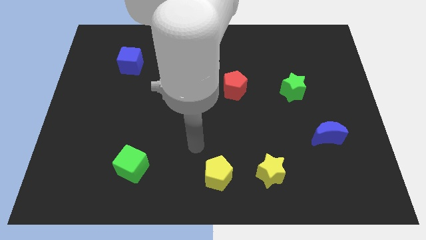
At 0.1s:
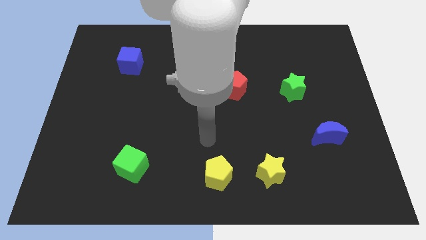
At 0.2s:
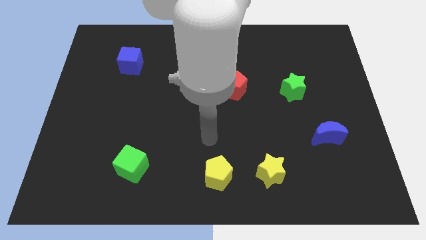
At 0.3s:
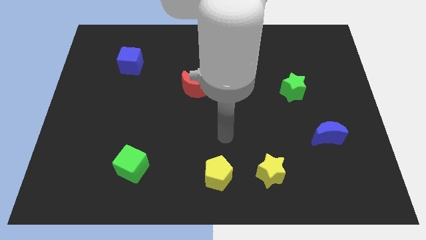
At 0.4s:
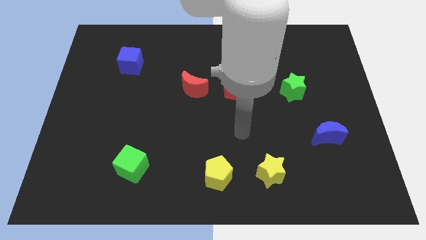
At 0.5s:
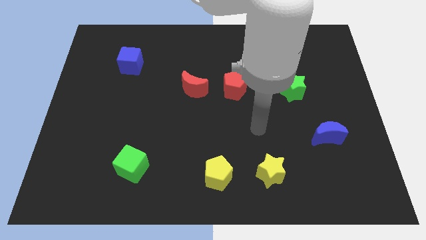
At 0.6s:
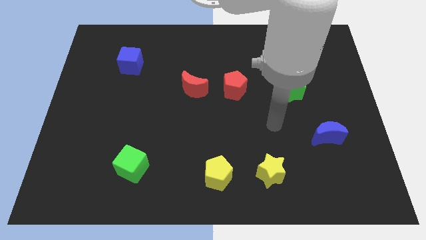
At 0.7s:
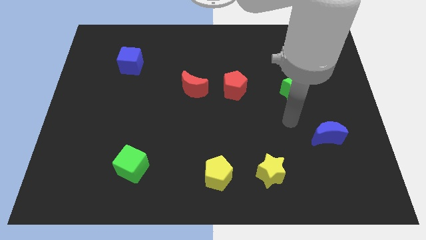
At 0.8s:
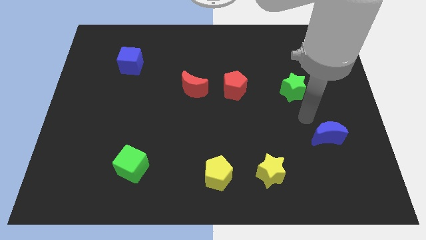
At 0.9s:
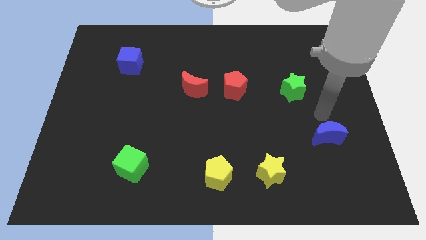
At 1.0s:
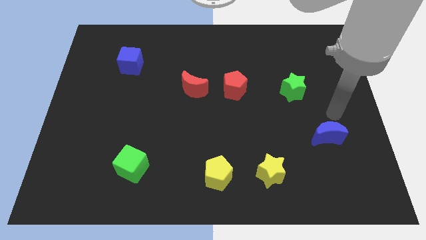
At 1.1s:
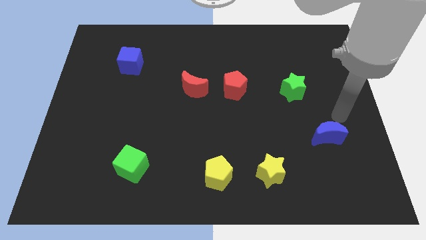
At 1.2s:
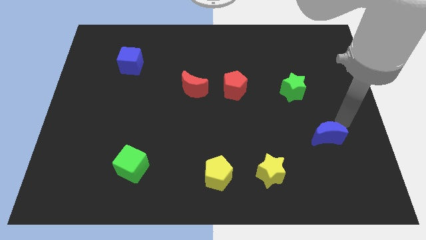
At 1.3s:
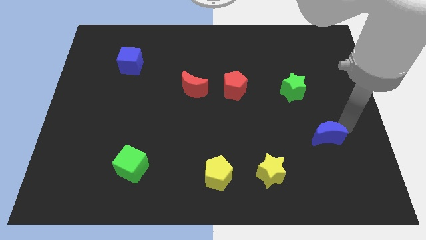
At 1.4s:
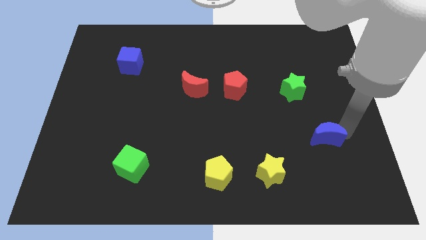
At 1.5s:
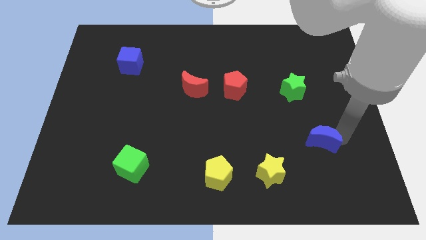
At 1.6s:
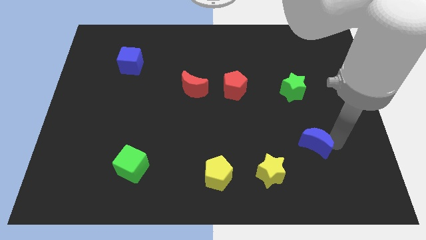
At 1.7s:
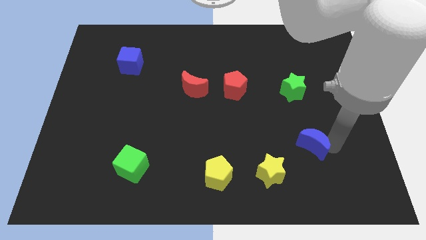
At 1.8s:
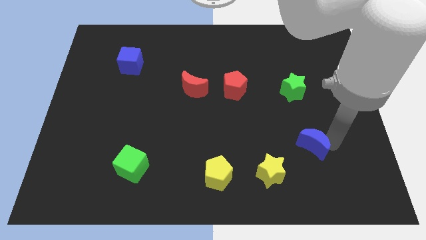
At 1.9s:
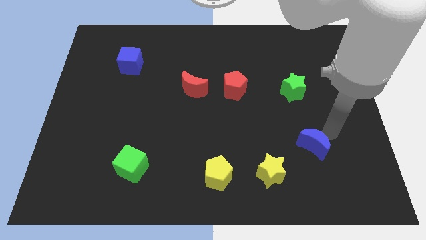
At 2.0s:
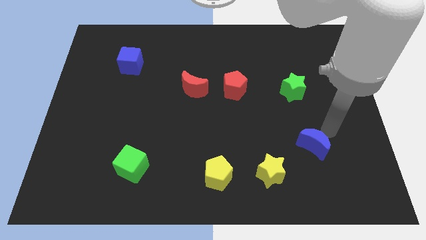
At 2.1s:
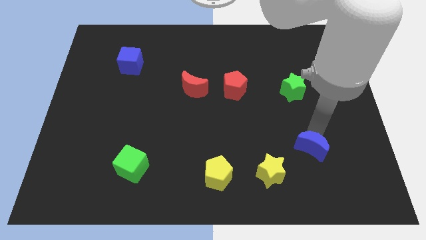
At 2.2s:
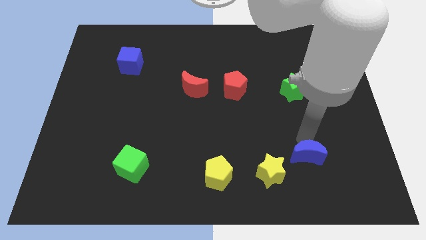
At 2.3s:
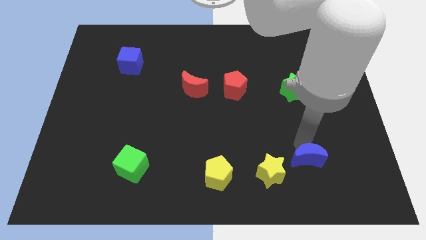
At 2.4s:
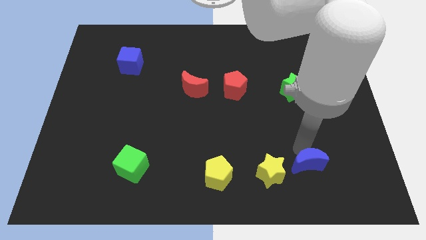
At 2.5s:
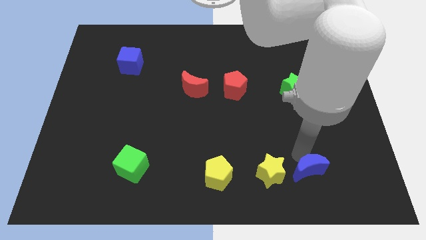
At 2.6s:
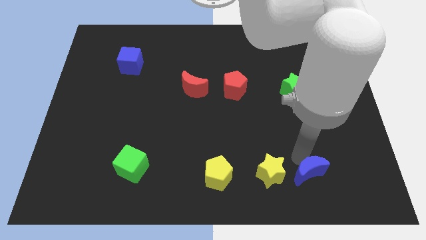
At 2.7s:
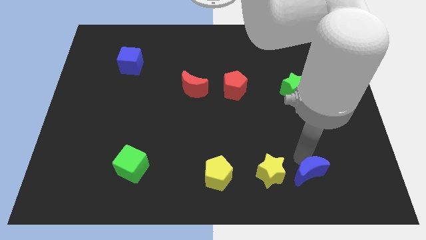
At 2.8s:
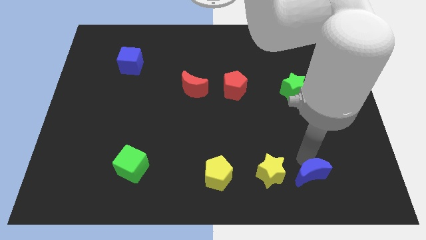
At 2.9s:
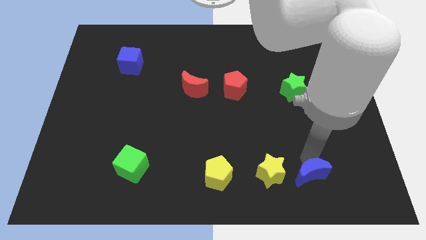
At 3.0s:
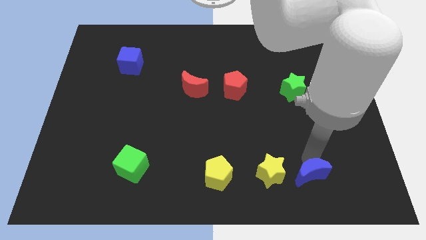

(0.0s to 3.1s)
place the blue moon right to the yellow star

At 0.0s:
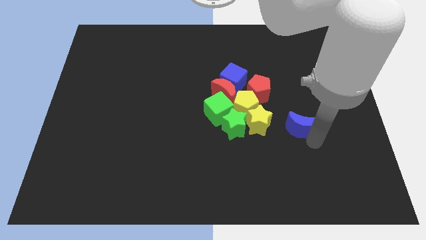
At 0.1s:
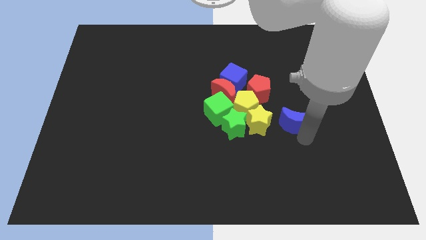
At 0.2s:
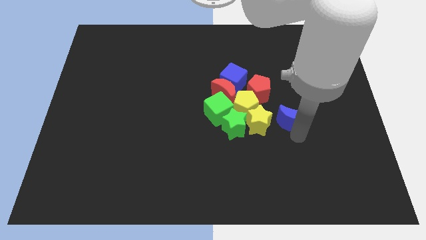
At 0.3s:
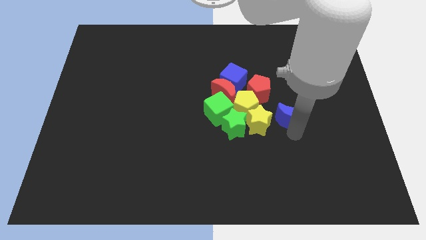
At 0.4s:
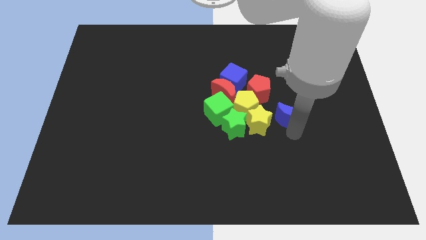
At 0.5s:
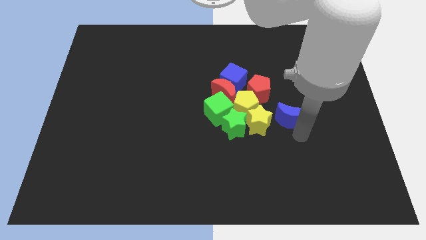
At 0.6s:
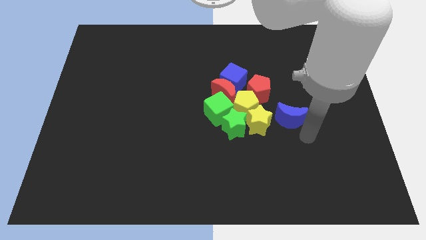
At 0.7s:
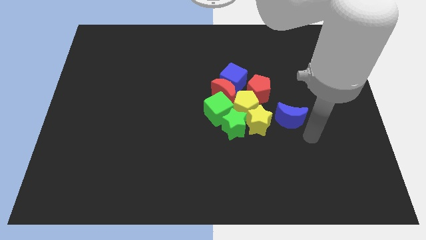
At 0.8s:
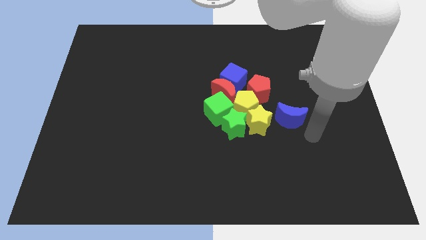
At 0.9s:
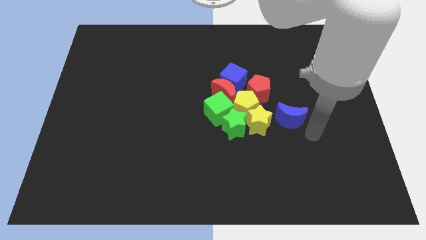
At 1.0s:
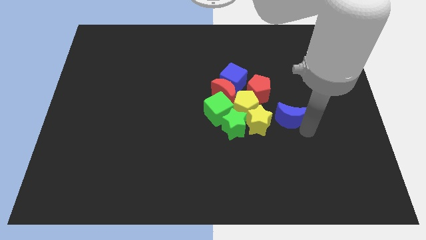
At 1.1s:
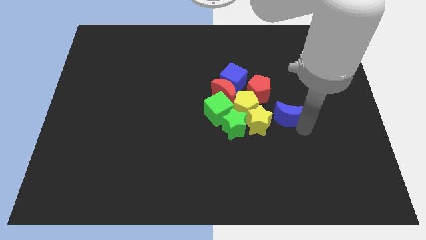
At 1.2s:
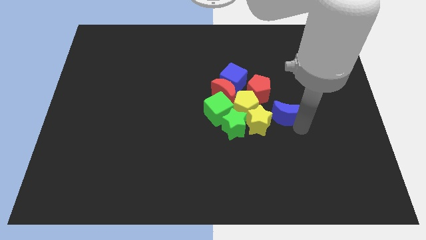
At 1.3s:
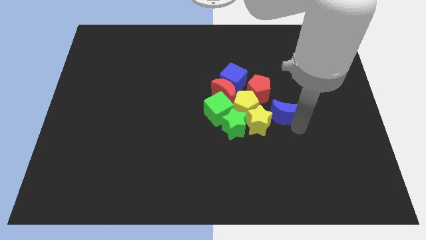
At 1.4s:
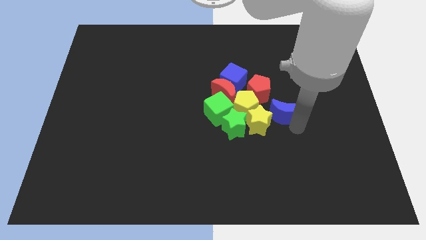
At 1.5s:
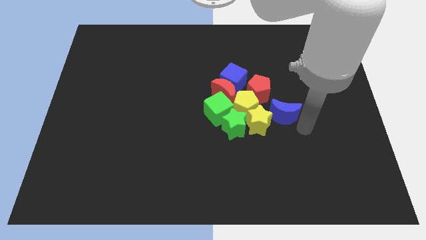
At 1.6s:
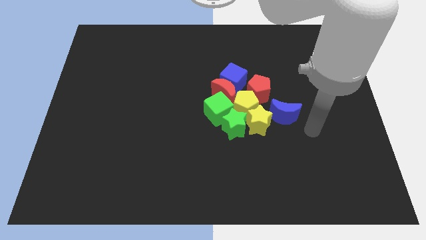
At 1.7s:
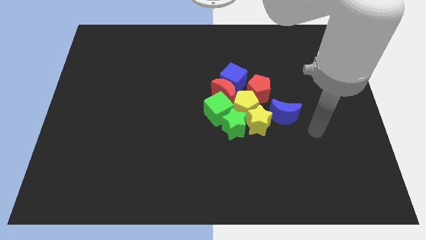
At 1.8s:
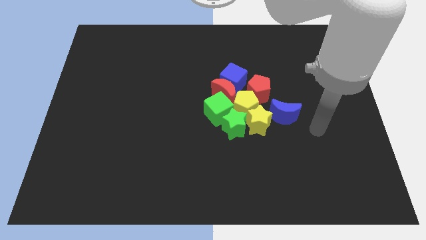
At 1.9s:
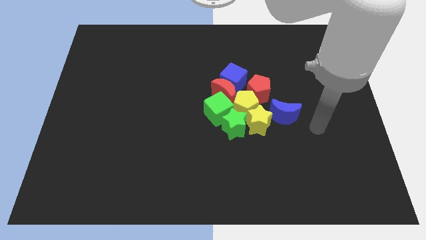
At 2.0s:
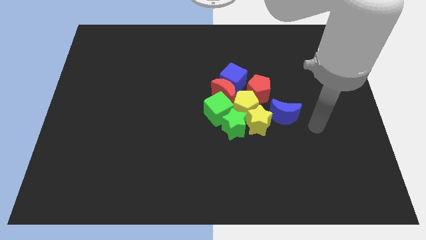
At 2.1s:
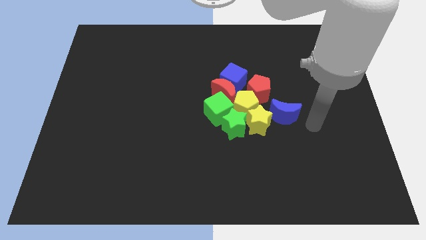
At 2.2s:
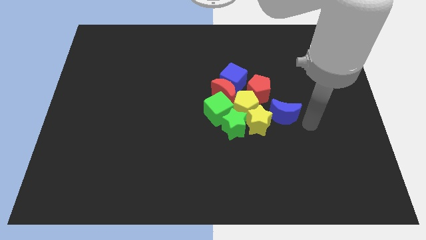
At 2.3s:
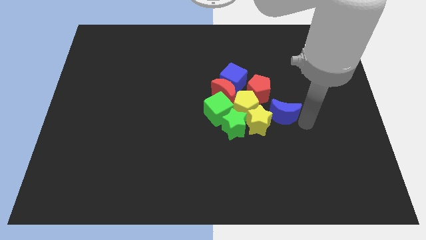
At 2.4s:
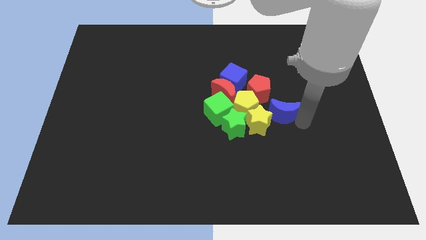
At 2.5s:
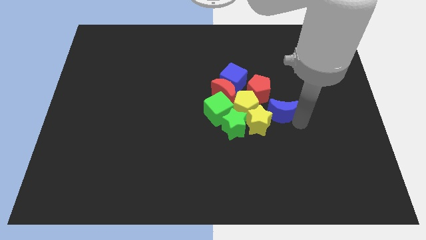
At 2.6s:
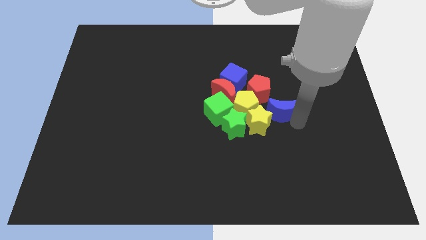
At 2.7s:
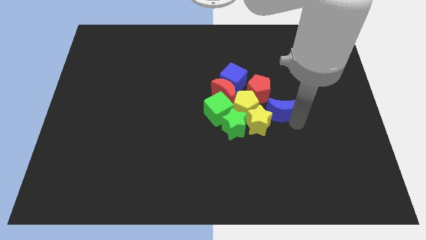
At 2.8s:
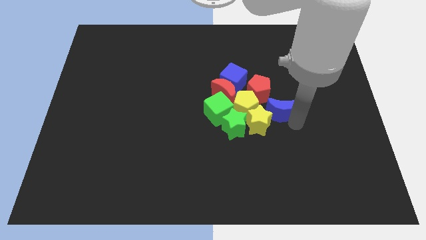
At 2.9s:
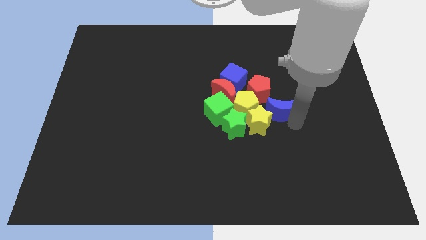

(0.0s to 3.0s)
move the blue crescent to the right side of the yellow pentagon

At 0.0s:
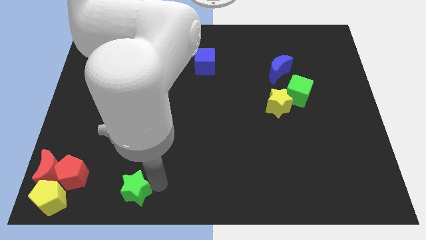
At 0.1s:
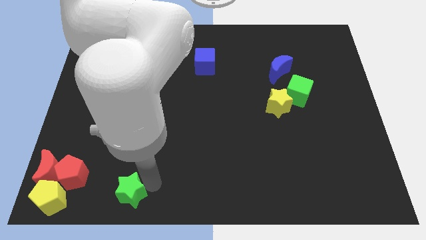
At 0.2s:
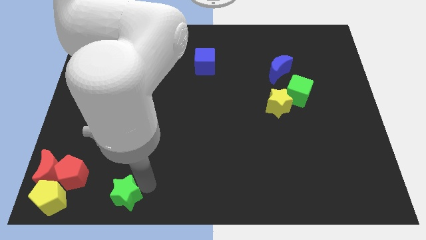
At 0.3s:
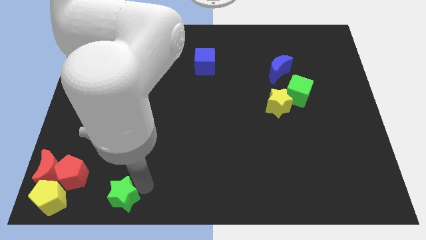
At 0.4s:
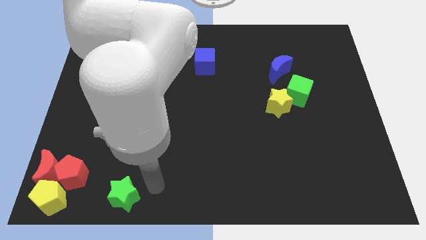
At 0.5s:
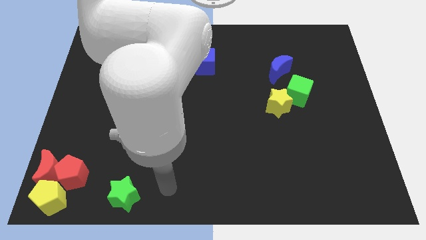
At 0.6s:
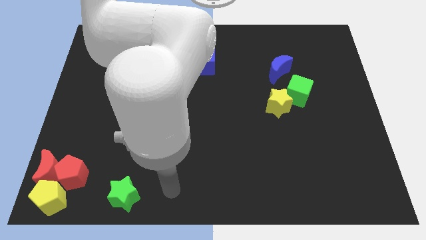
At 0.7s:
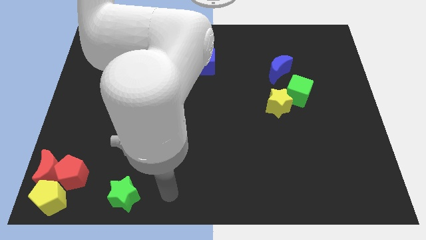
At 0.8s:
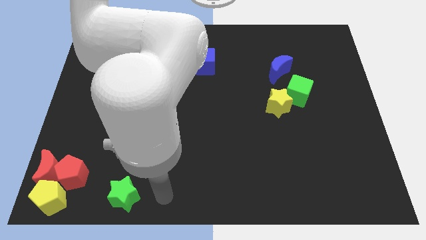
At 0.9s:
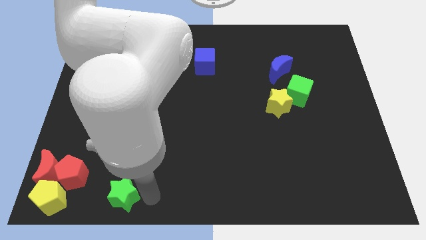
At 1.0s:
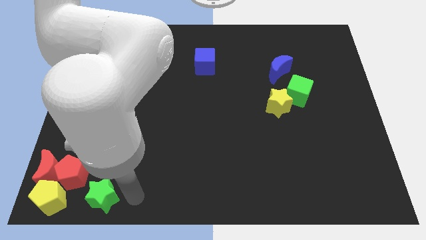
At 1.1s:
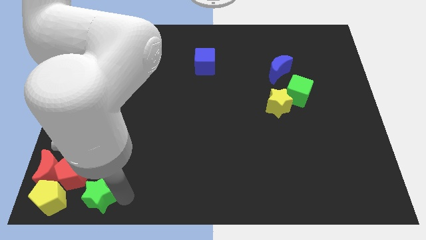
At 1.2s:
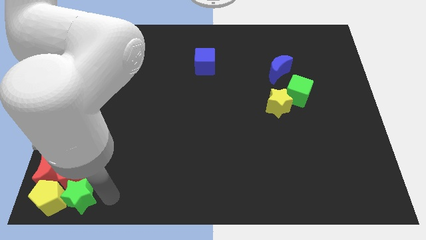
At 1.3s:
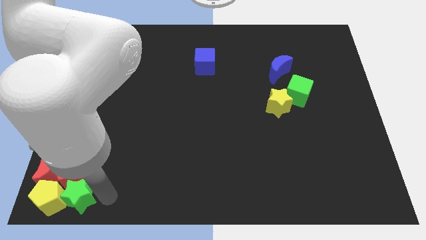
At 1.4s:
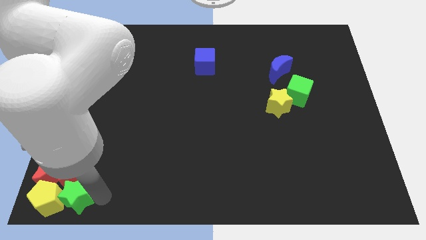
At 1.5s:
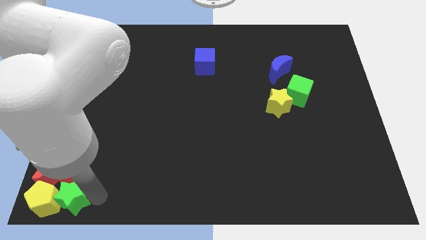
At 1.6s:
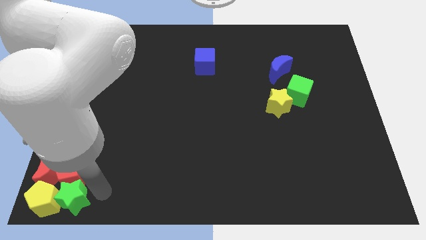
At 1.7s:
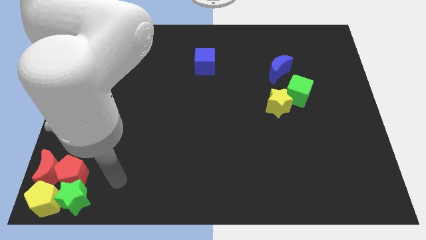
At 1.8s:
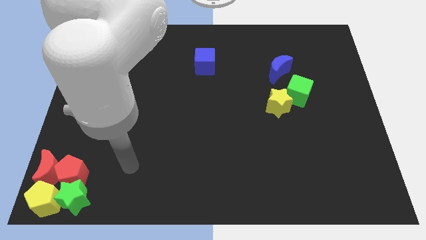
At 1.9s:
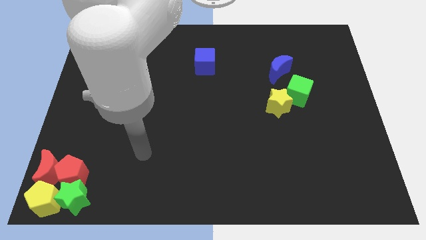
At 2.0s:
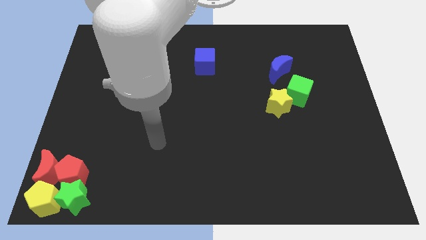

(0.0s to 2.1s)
place the green star right to the yellow pentagon

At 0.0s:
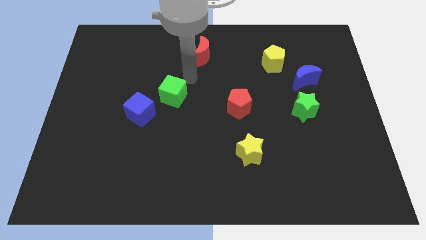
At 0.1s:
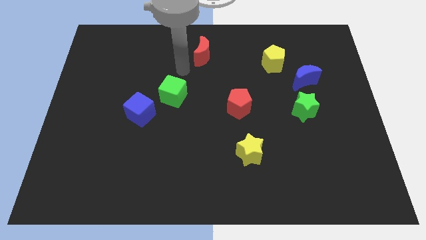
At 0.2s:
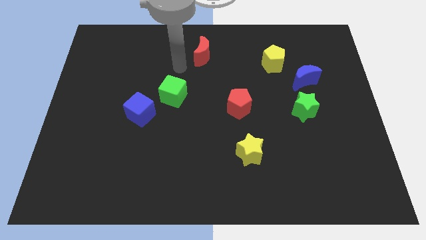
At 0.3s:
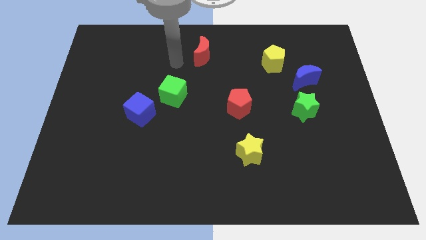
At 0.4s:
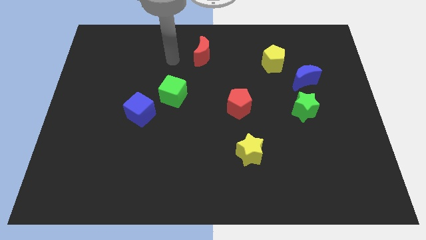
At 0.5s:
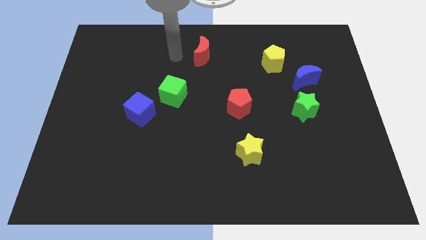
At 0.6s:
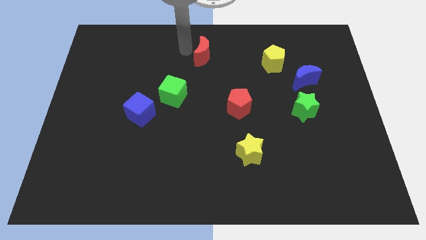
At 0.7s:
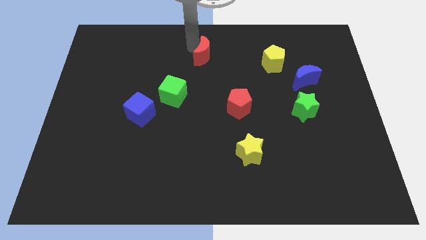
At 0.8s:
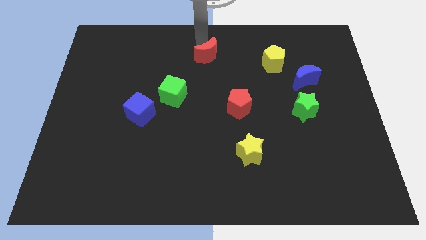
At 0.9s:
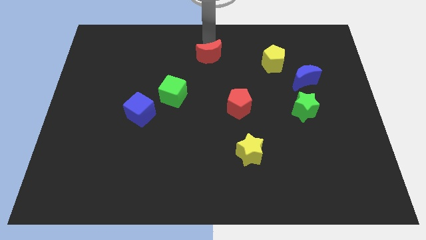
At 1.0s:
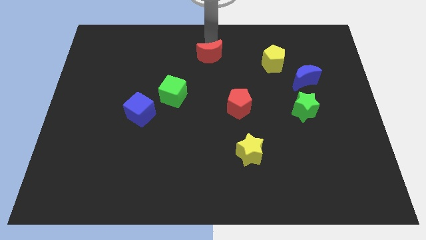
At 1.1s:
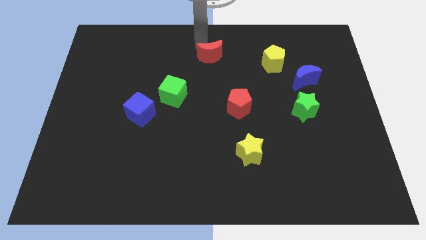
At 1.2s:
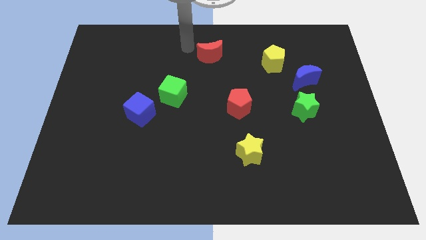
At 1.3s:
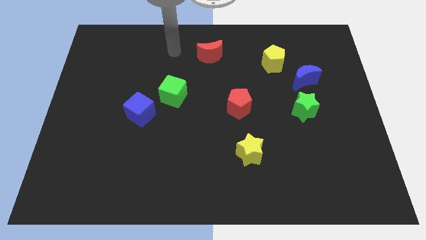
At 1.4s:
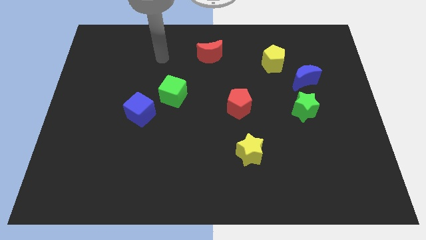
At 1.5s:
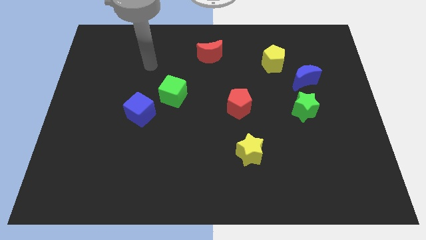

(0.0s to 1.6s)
turn the red crescent towards the red pentagon
